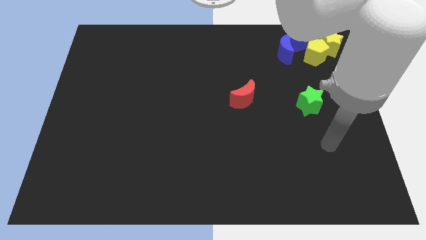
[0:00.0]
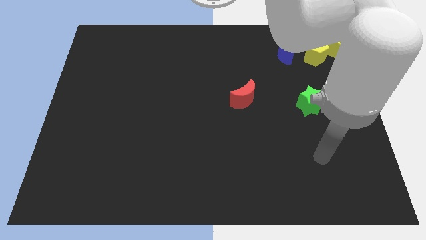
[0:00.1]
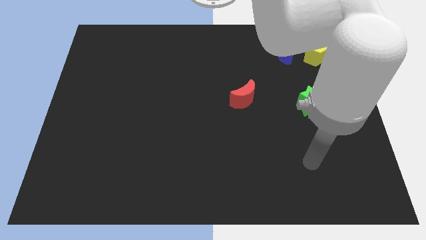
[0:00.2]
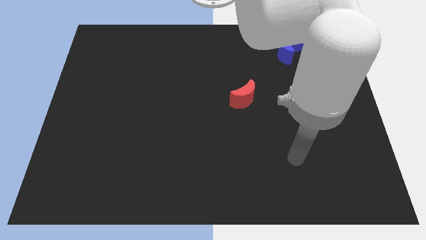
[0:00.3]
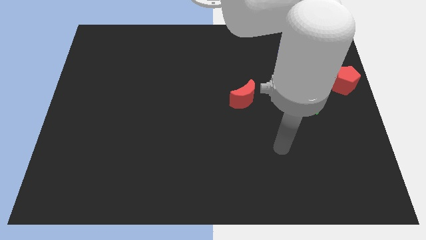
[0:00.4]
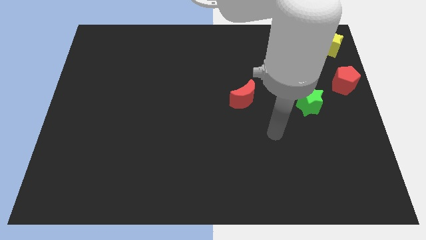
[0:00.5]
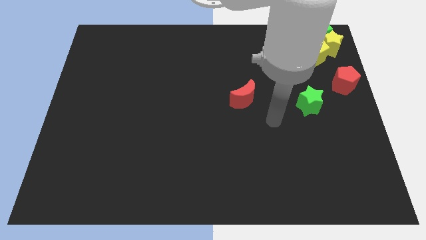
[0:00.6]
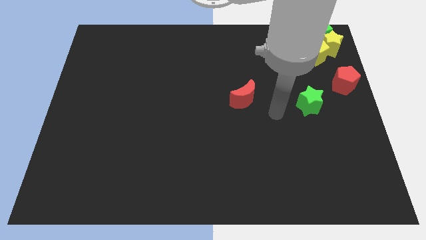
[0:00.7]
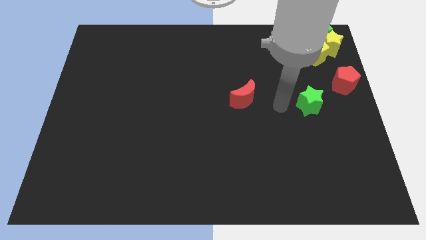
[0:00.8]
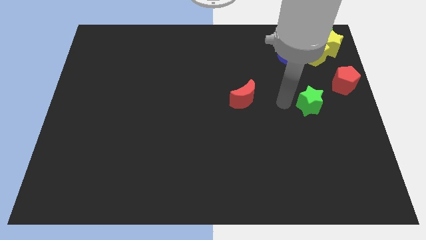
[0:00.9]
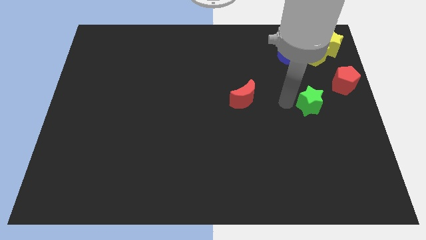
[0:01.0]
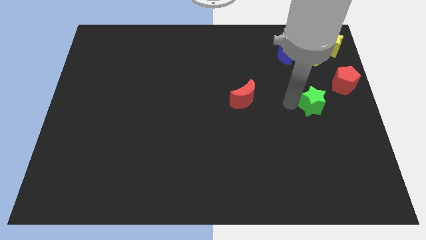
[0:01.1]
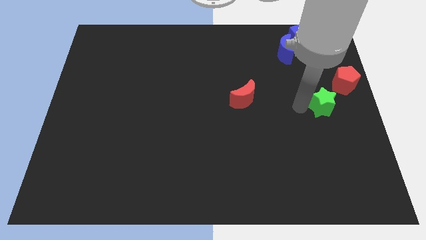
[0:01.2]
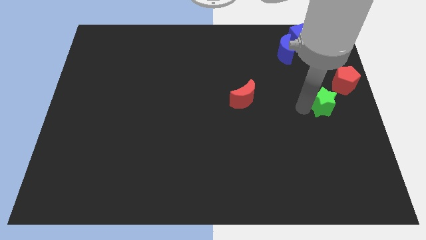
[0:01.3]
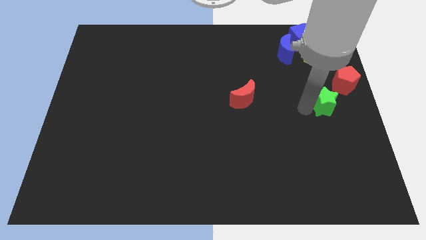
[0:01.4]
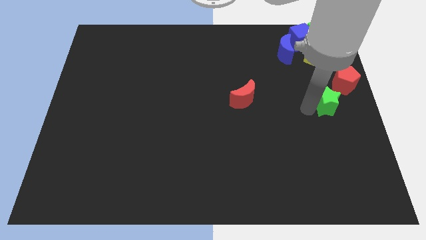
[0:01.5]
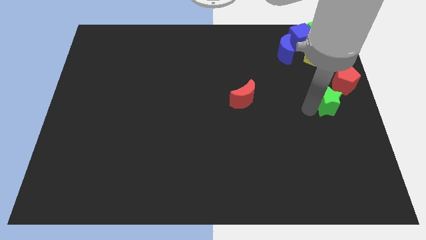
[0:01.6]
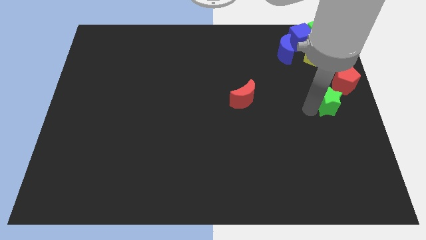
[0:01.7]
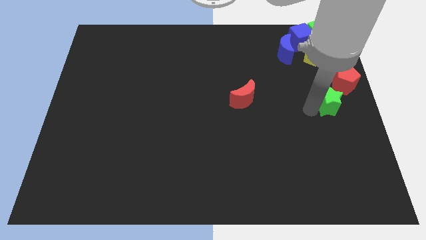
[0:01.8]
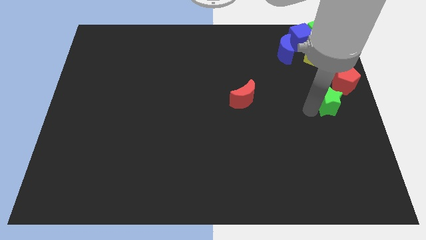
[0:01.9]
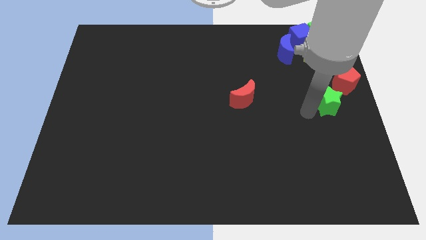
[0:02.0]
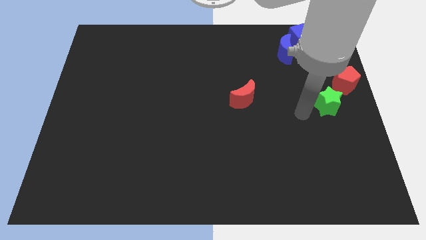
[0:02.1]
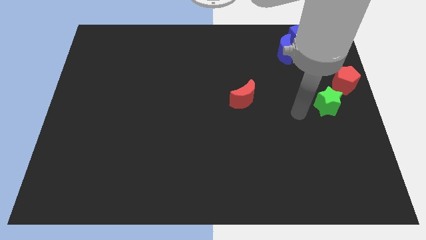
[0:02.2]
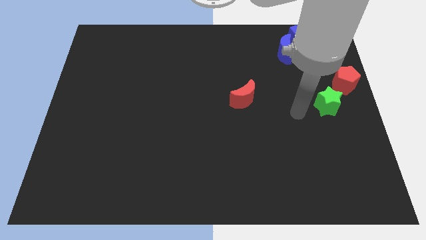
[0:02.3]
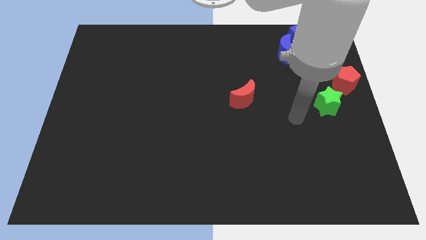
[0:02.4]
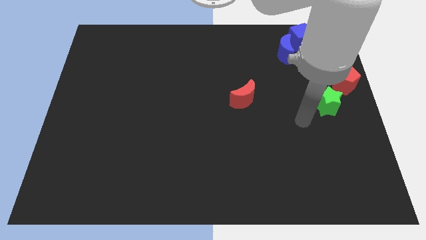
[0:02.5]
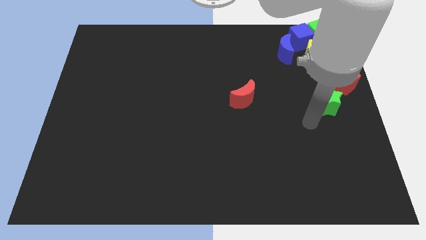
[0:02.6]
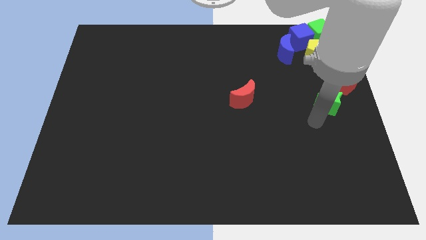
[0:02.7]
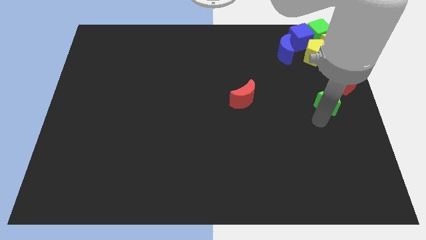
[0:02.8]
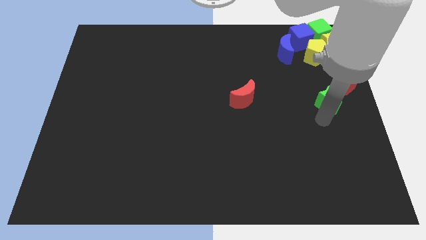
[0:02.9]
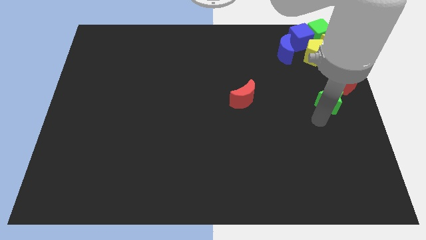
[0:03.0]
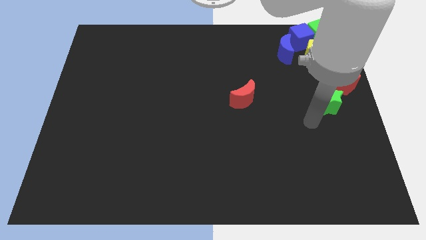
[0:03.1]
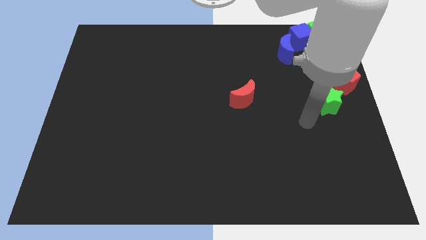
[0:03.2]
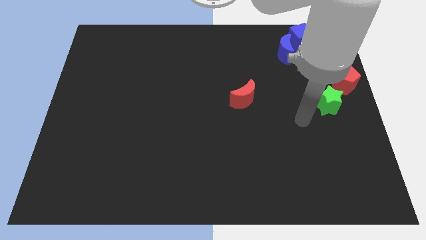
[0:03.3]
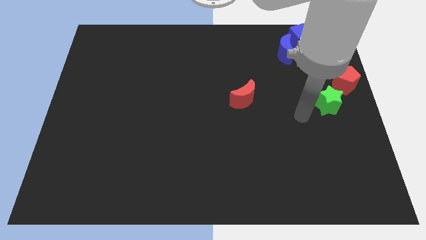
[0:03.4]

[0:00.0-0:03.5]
slide the green star close to the red pentagon

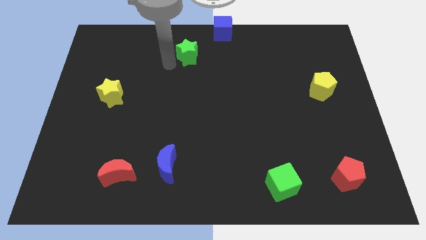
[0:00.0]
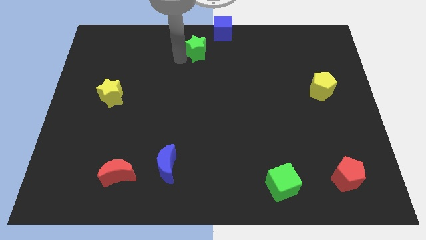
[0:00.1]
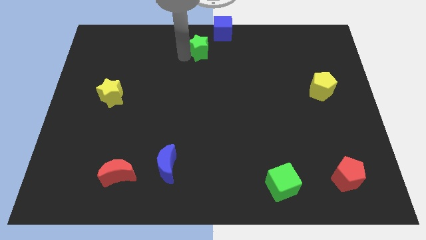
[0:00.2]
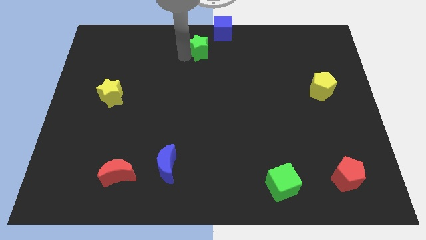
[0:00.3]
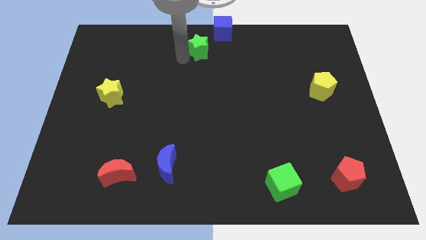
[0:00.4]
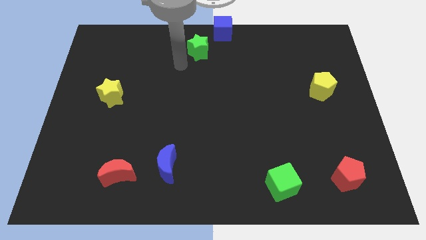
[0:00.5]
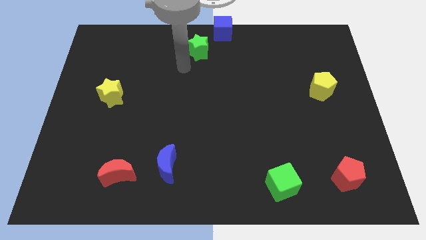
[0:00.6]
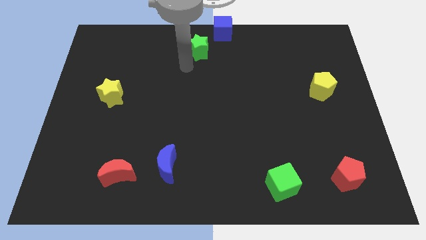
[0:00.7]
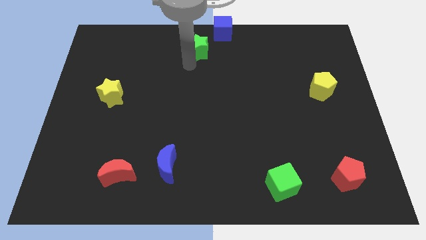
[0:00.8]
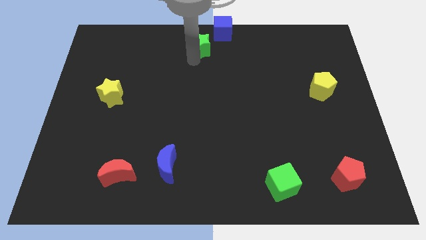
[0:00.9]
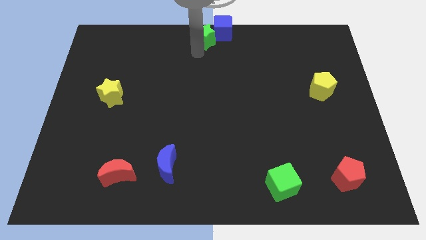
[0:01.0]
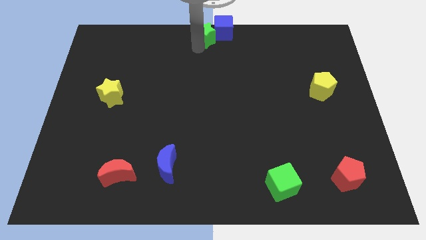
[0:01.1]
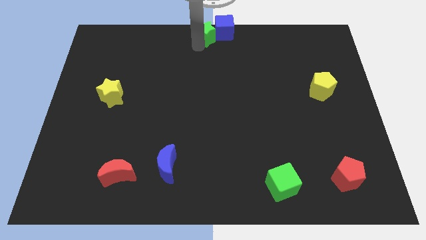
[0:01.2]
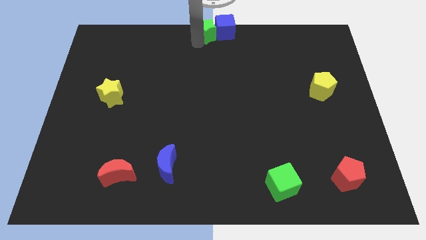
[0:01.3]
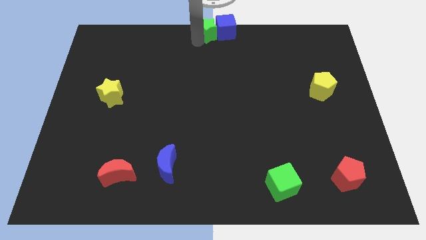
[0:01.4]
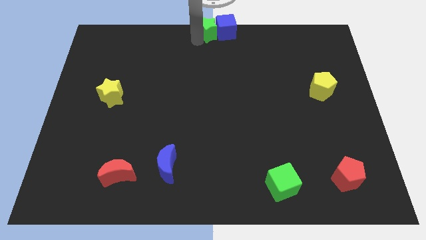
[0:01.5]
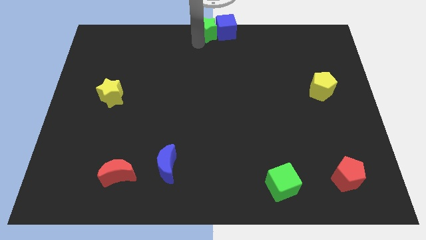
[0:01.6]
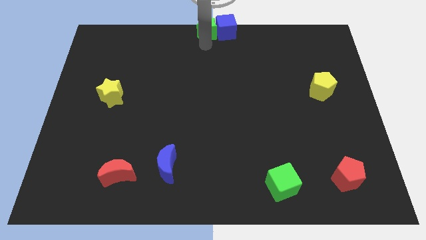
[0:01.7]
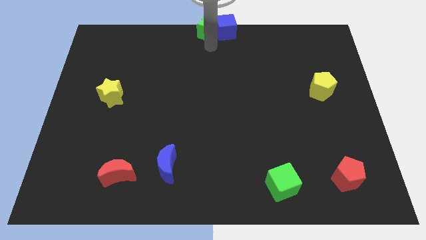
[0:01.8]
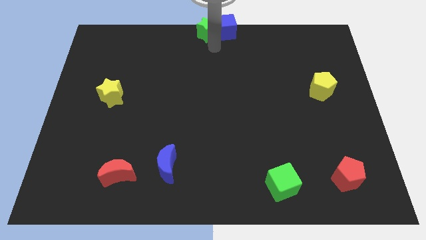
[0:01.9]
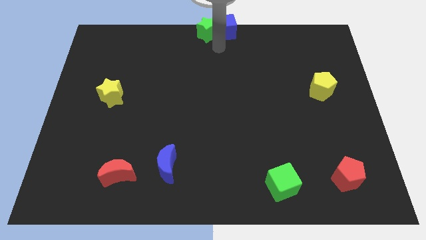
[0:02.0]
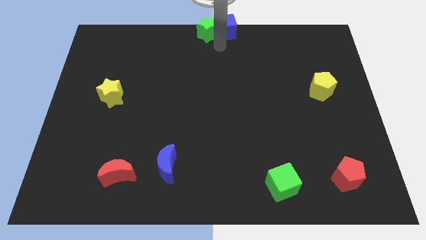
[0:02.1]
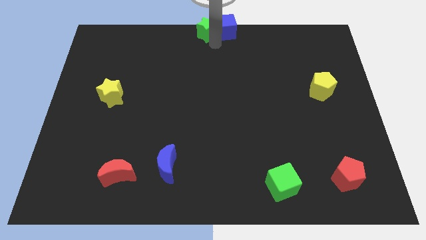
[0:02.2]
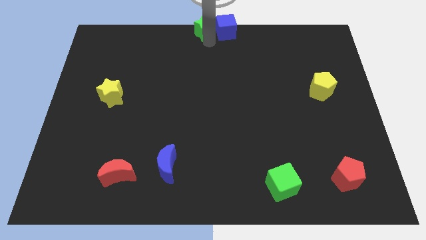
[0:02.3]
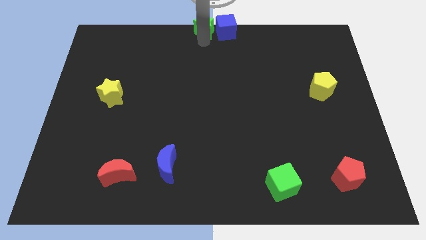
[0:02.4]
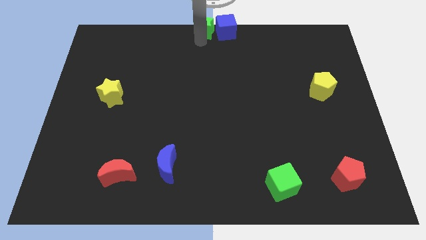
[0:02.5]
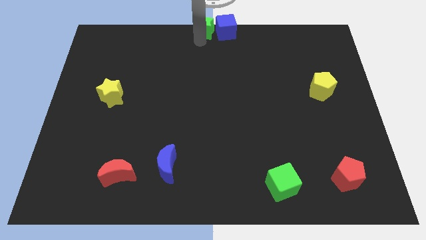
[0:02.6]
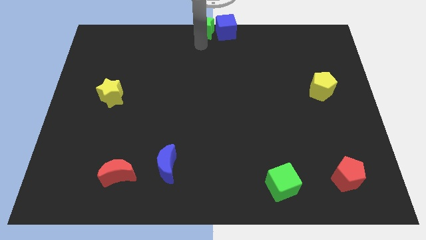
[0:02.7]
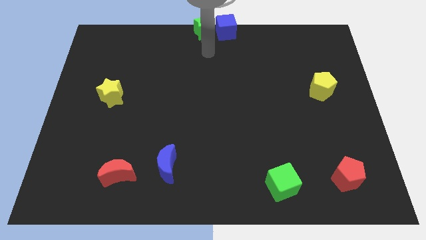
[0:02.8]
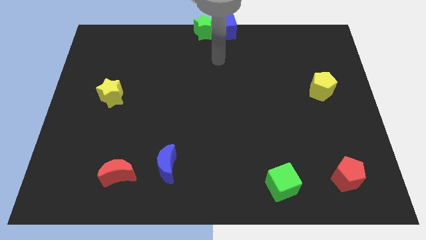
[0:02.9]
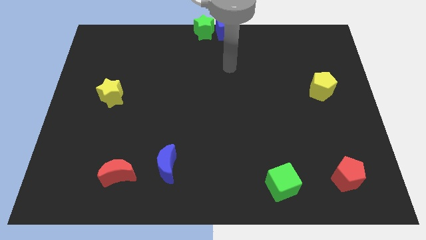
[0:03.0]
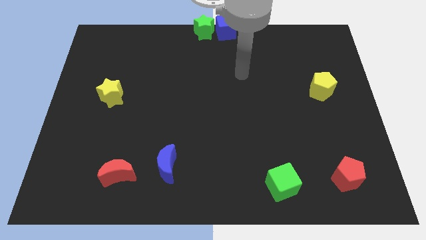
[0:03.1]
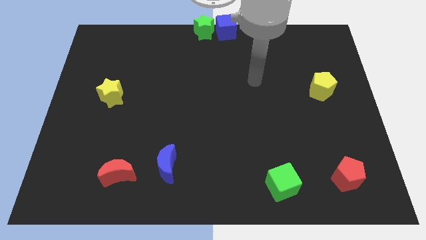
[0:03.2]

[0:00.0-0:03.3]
push green star in to blue cube

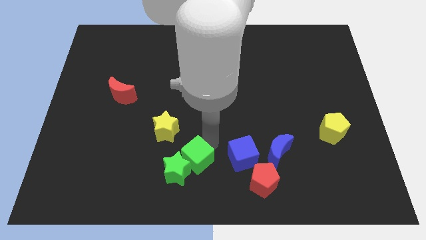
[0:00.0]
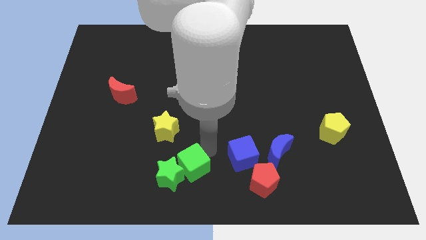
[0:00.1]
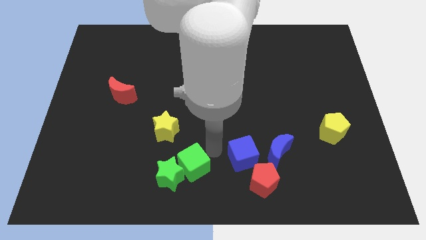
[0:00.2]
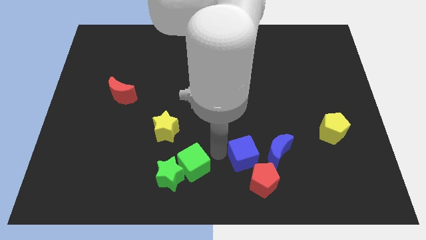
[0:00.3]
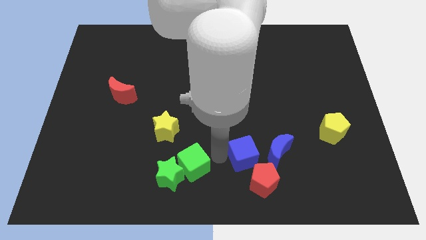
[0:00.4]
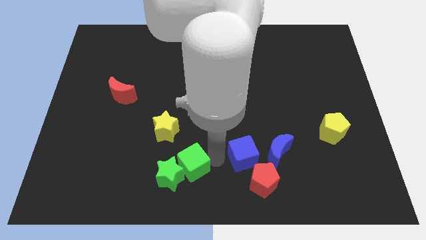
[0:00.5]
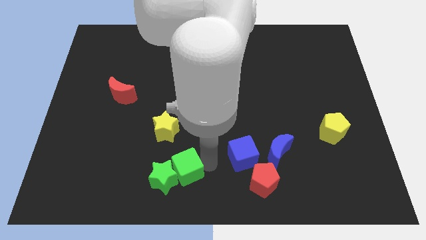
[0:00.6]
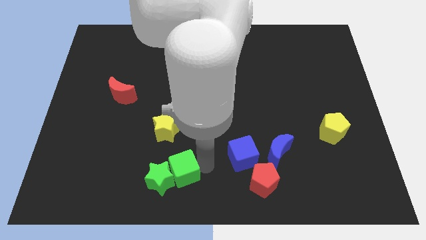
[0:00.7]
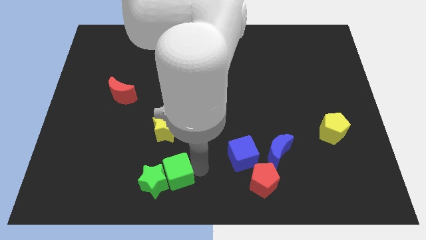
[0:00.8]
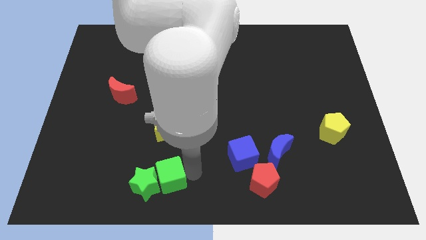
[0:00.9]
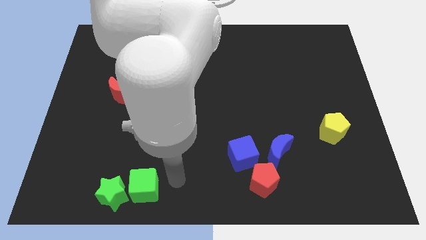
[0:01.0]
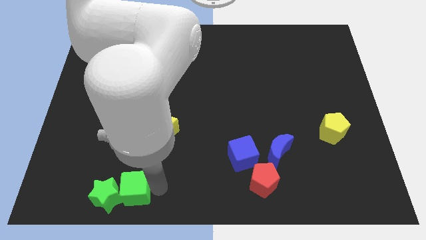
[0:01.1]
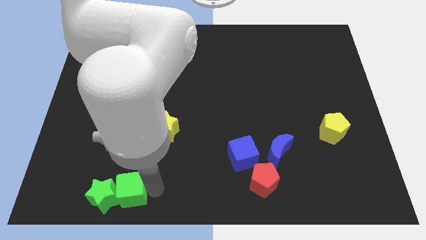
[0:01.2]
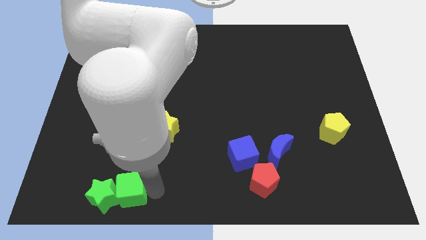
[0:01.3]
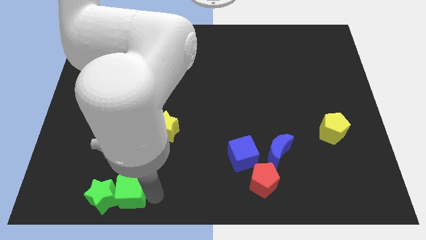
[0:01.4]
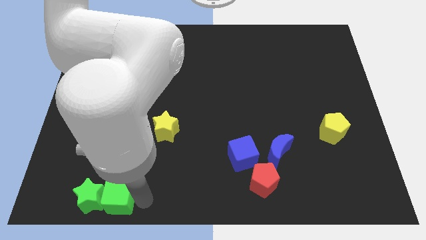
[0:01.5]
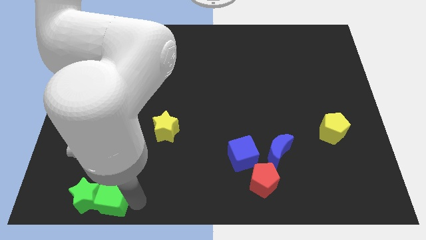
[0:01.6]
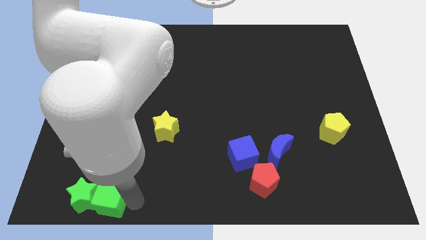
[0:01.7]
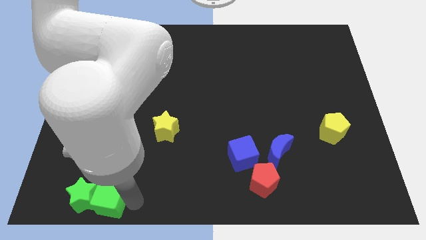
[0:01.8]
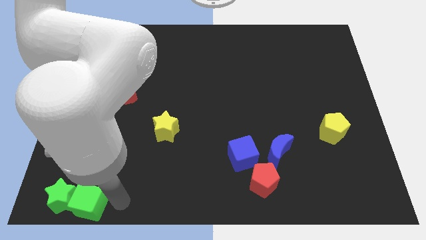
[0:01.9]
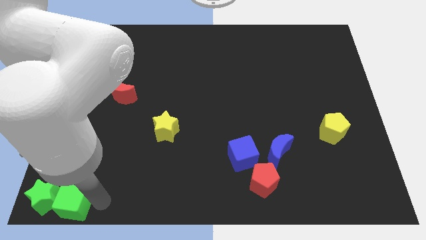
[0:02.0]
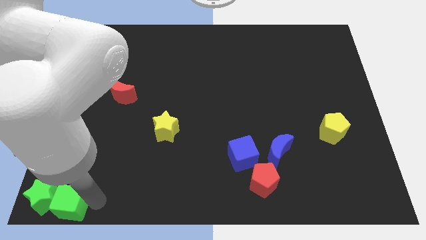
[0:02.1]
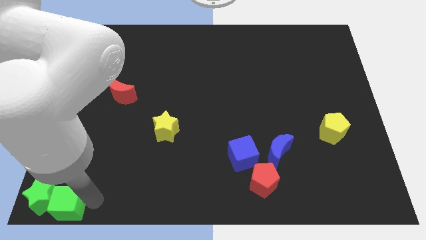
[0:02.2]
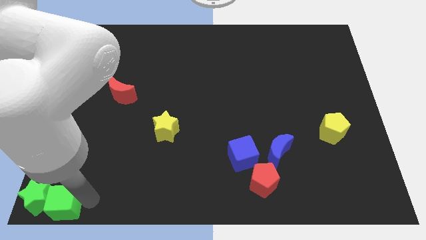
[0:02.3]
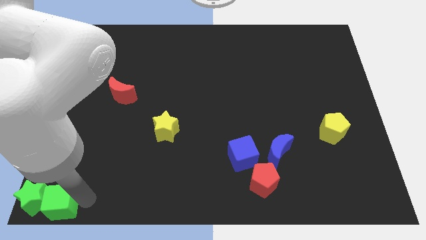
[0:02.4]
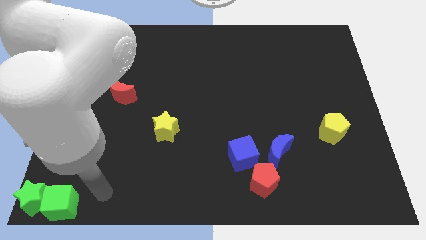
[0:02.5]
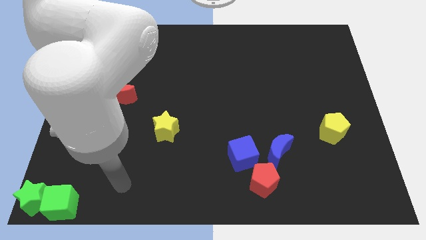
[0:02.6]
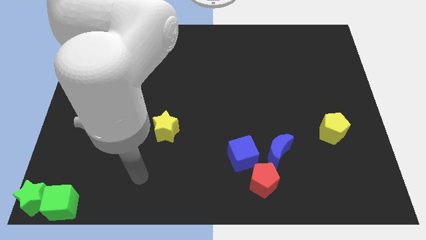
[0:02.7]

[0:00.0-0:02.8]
place green blocks to the bottom left corner of the board
